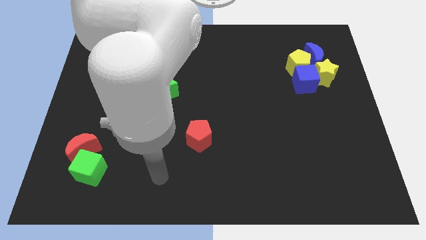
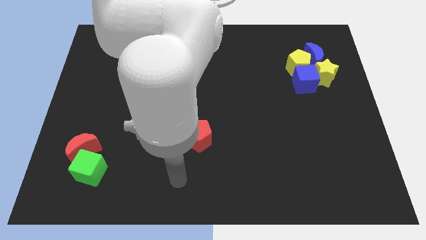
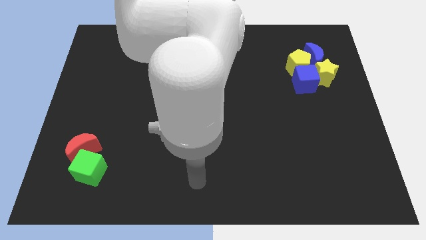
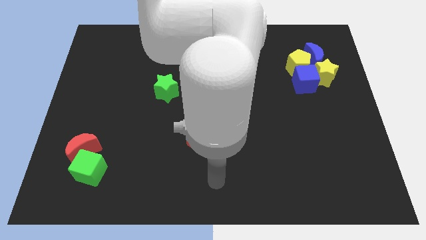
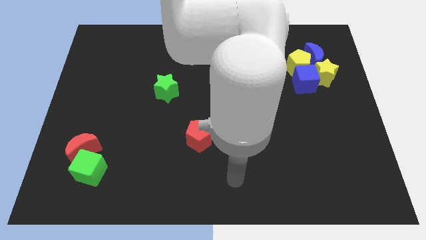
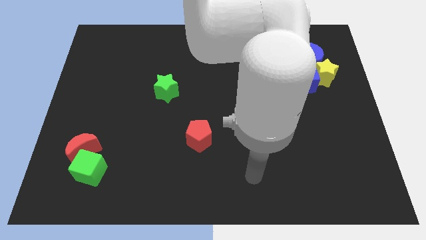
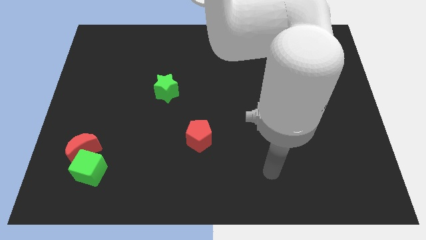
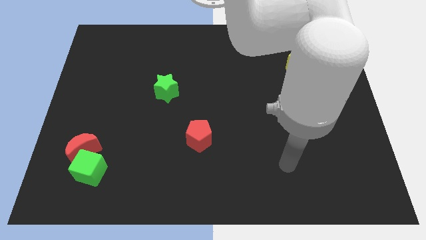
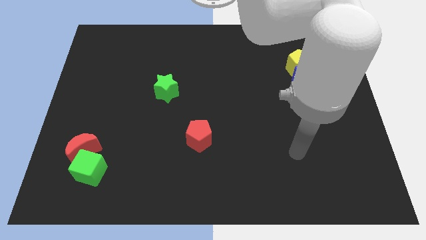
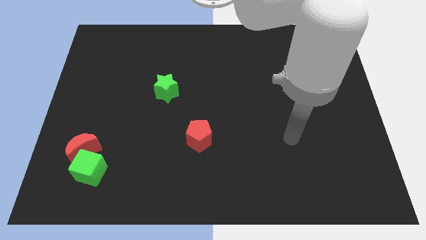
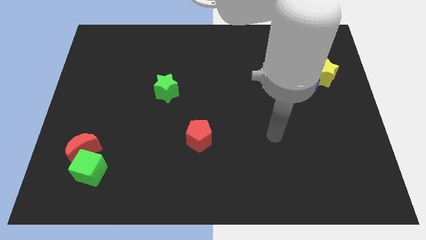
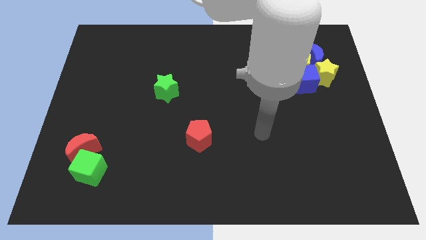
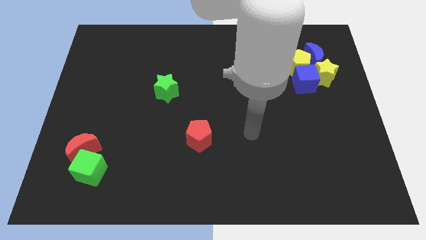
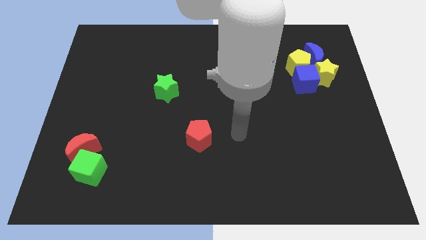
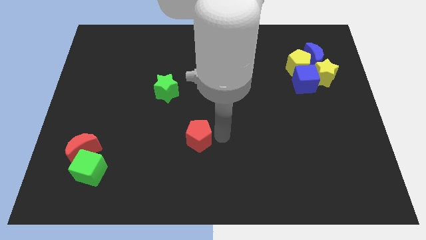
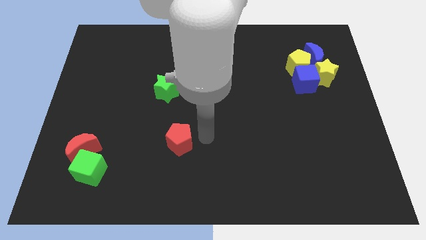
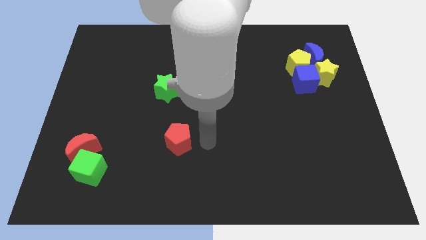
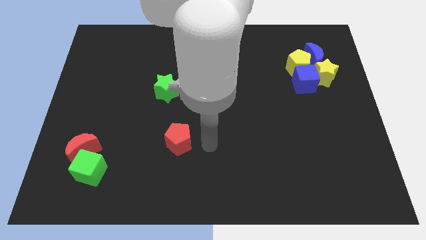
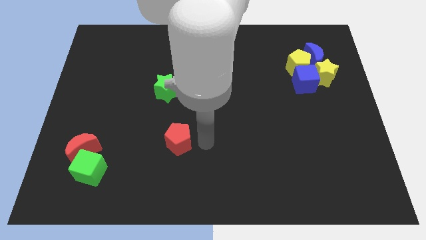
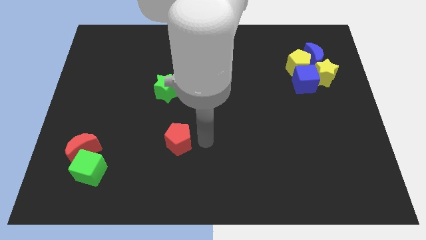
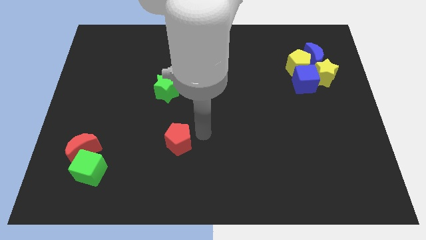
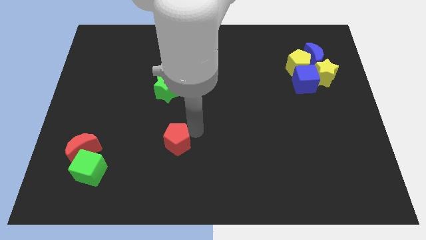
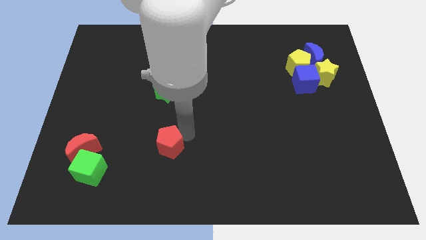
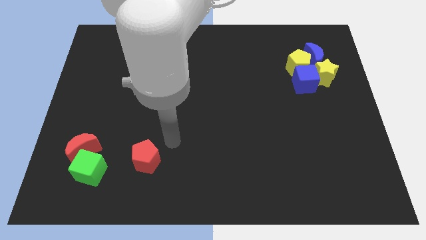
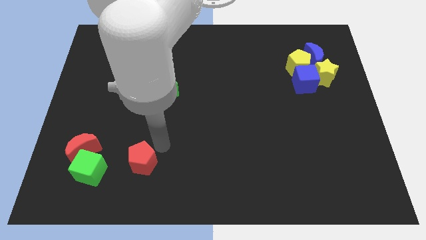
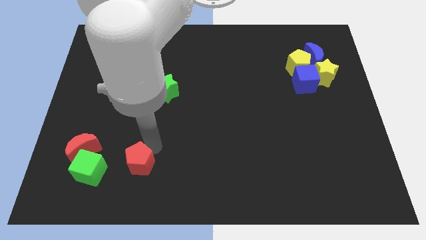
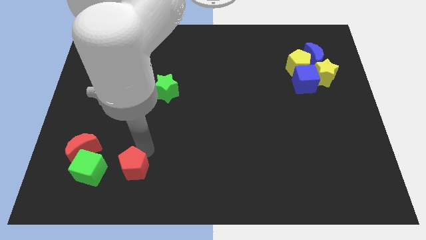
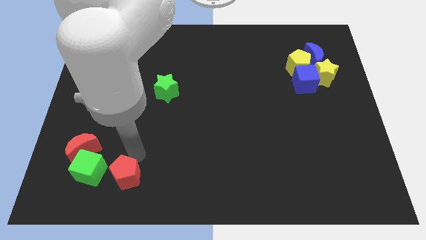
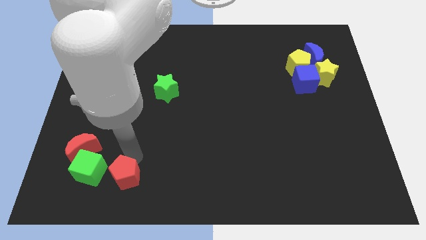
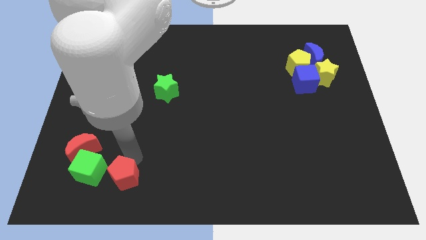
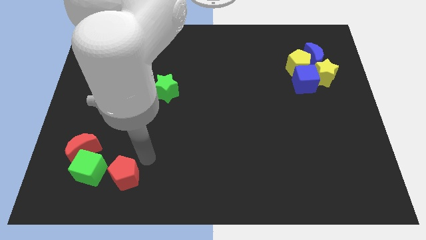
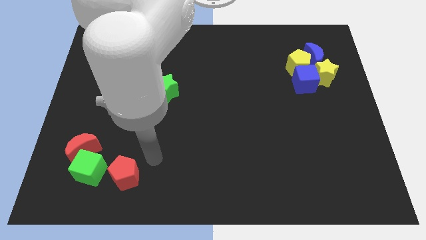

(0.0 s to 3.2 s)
move the red pentagon close to the green cube

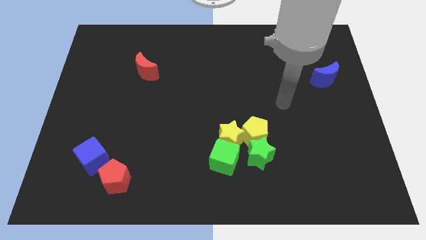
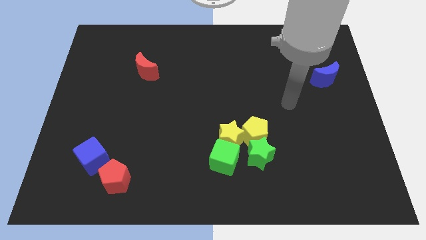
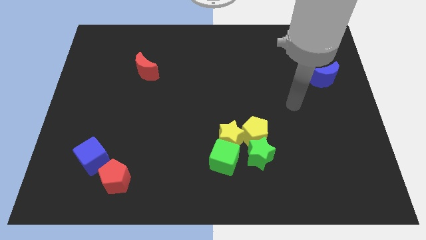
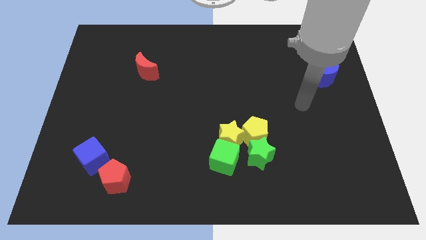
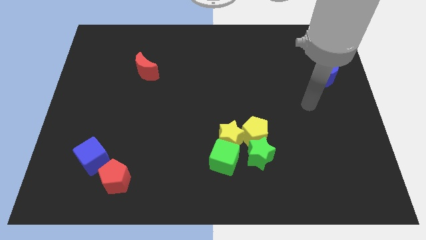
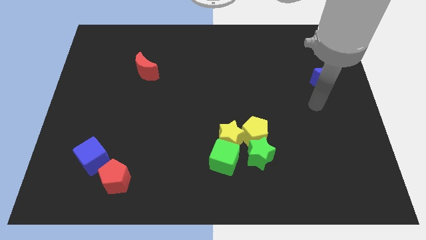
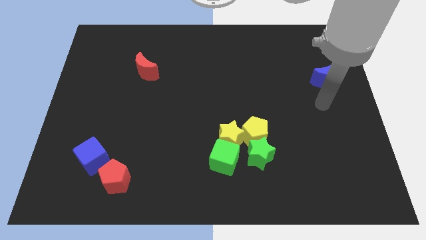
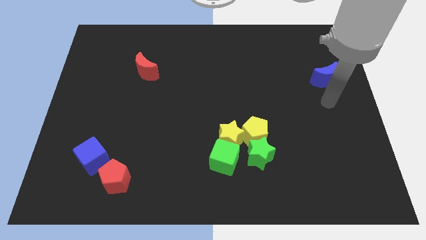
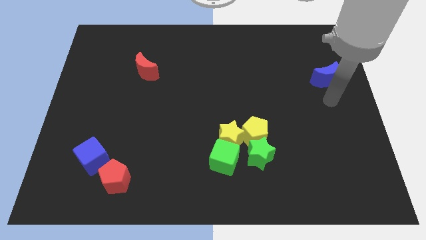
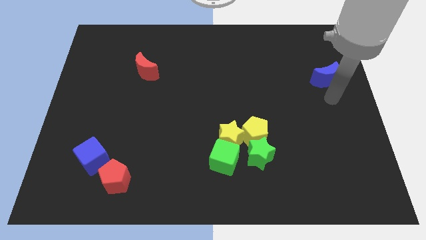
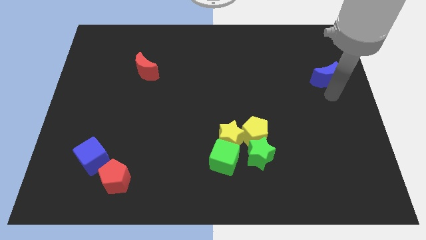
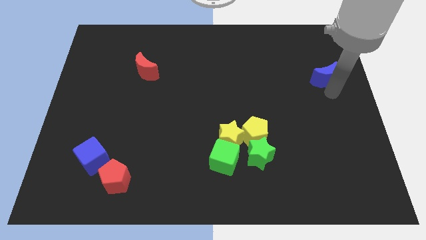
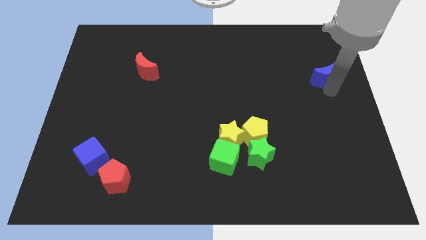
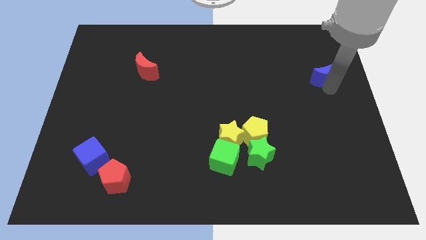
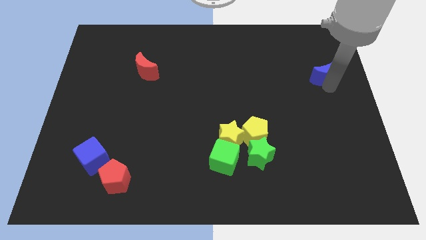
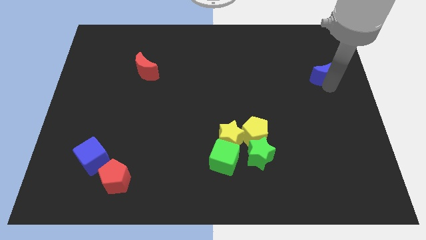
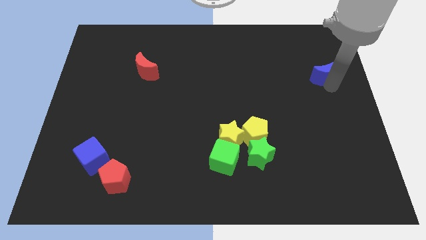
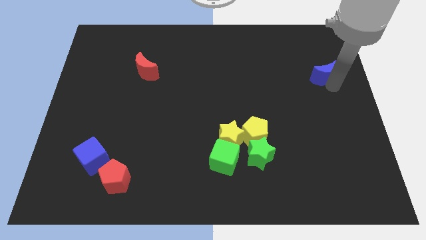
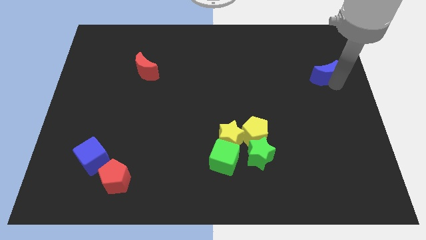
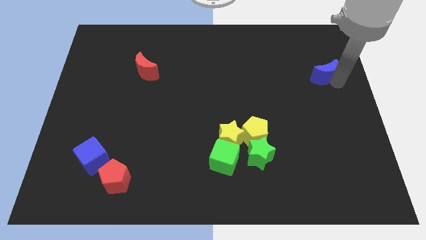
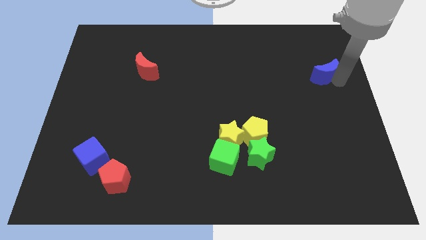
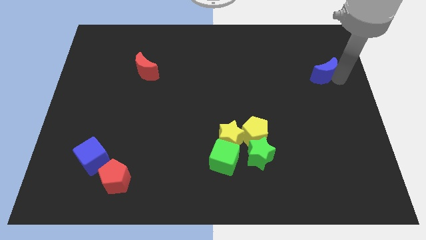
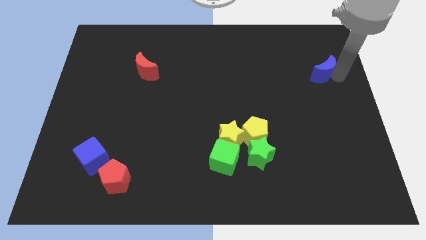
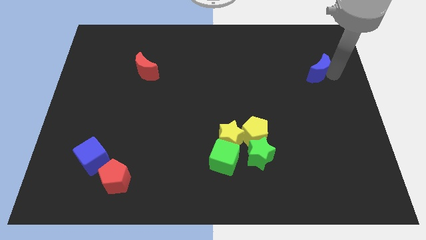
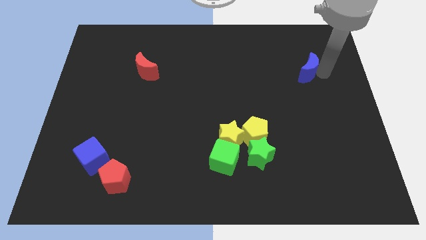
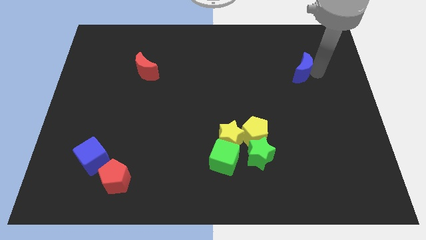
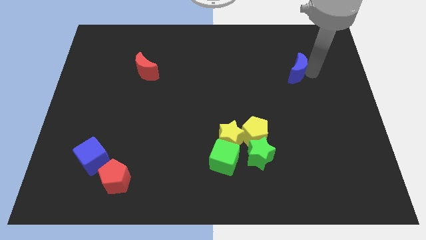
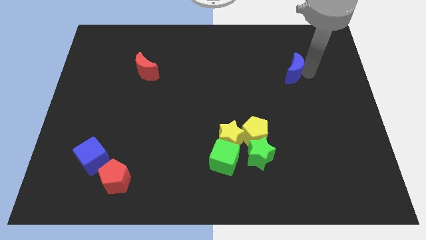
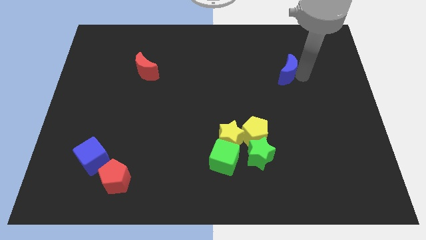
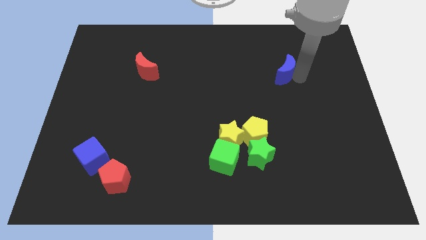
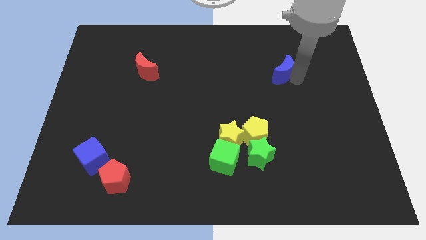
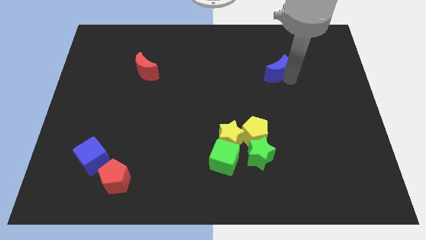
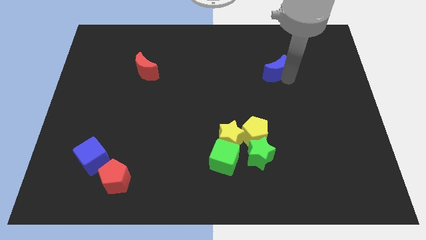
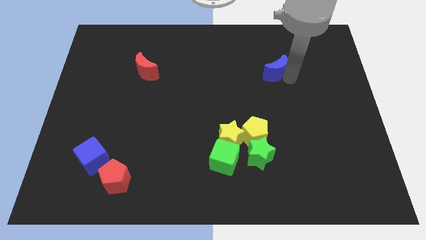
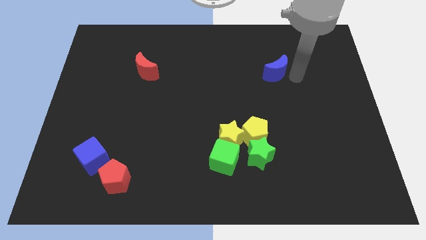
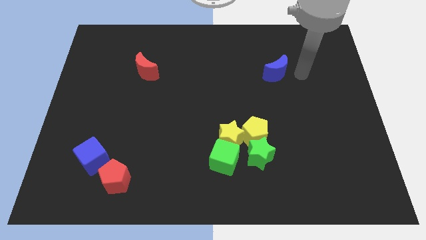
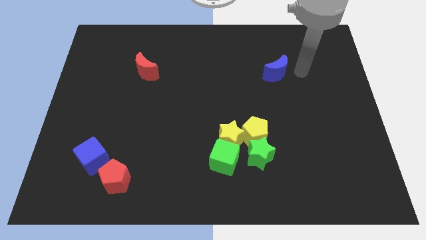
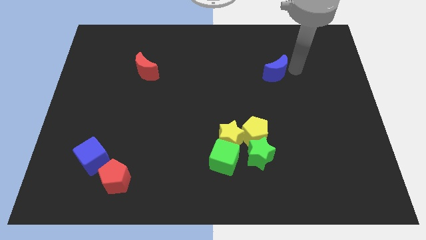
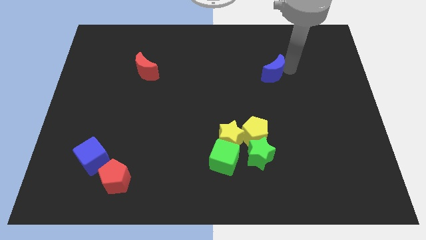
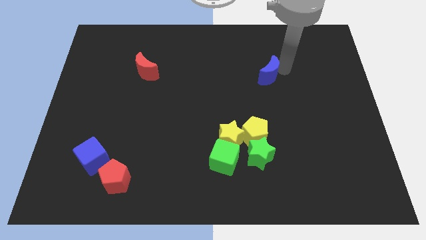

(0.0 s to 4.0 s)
move the blue crescent to the left side of the board

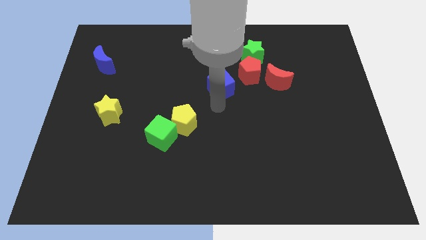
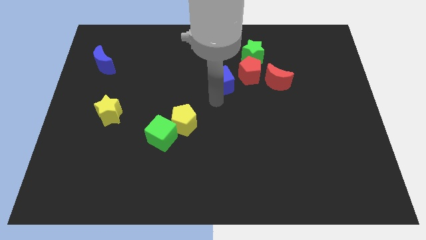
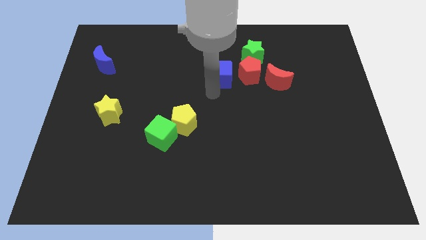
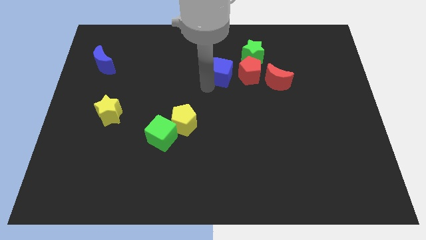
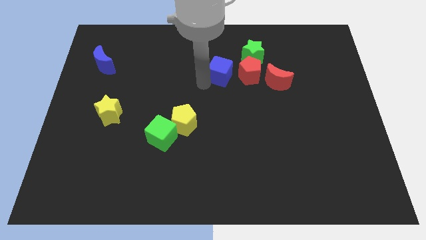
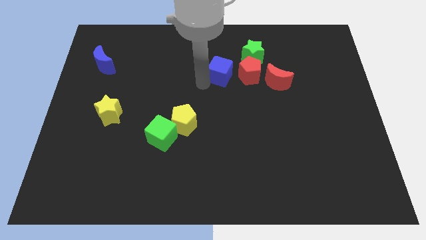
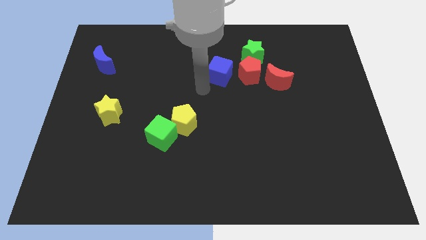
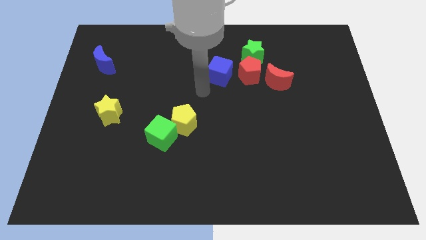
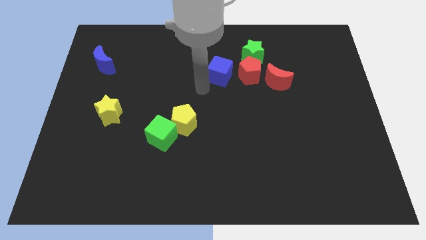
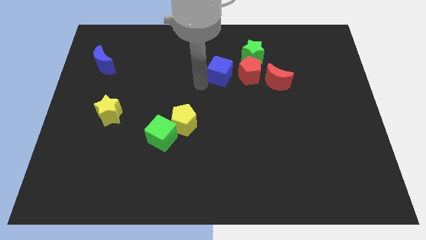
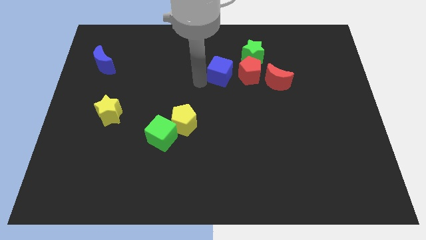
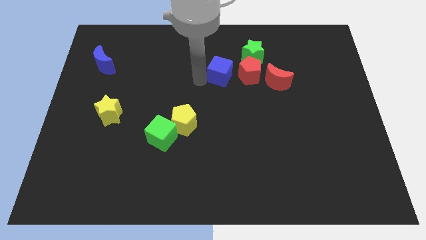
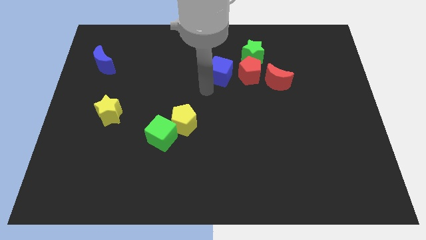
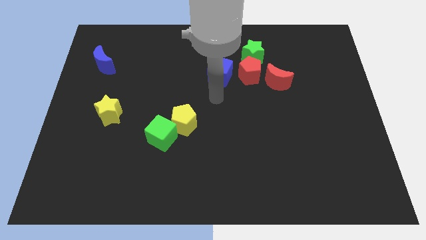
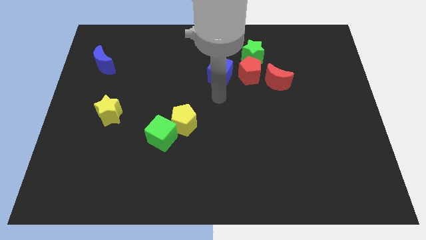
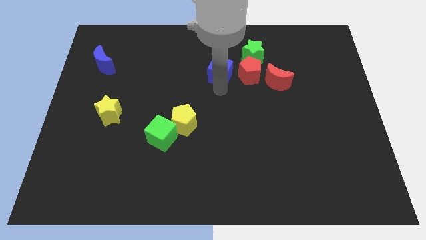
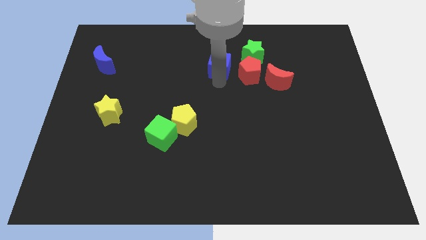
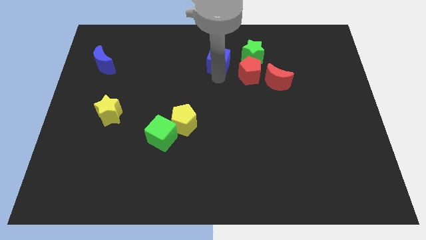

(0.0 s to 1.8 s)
slightly move the blue cube upwards
